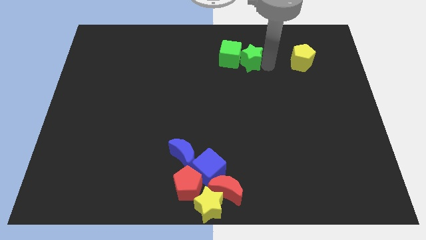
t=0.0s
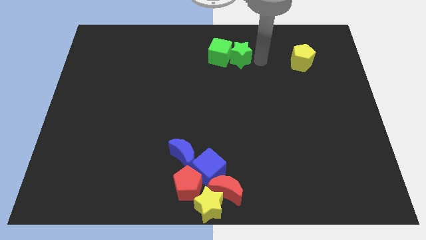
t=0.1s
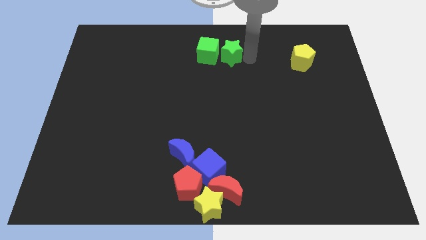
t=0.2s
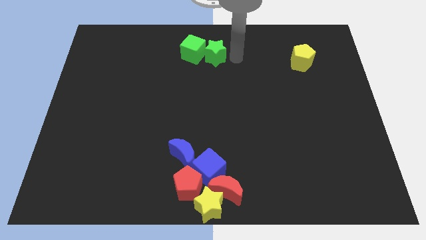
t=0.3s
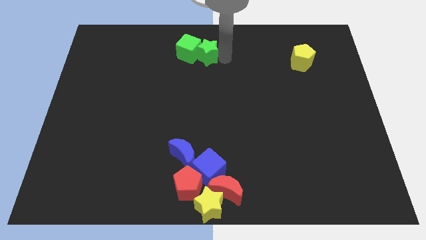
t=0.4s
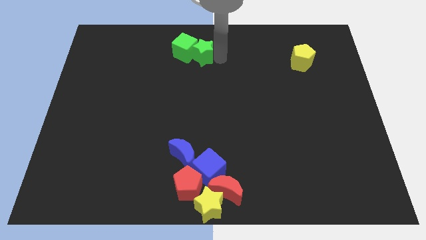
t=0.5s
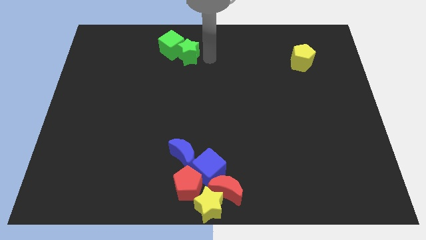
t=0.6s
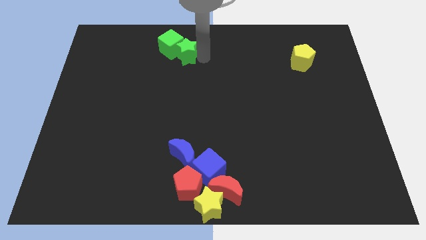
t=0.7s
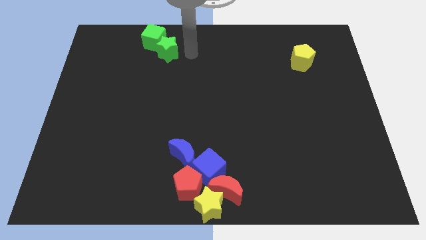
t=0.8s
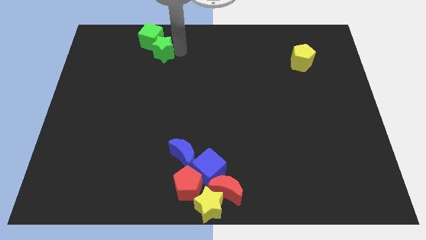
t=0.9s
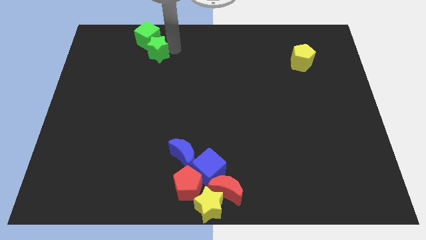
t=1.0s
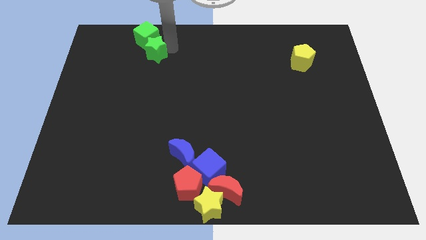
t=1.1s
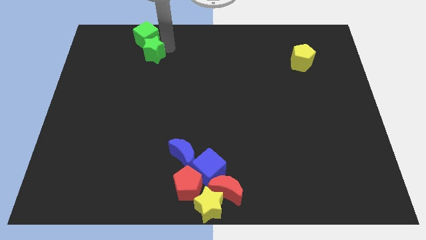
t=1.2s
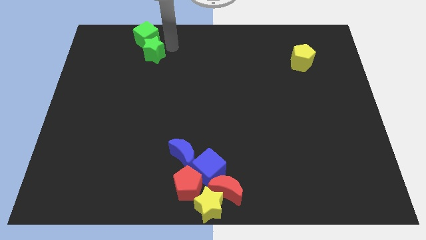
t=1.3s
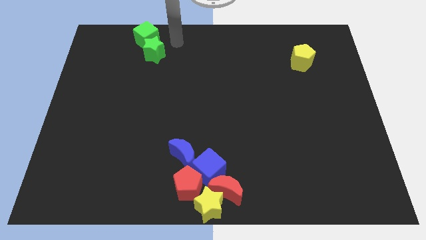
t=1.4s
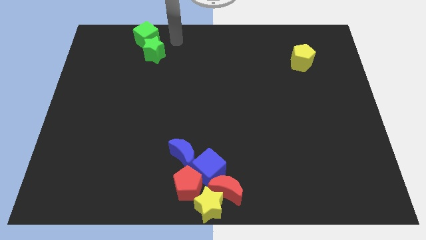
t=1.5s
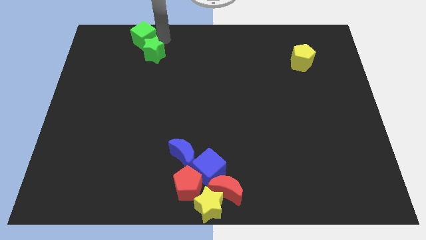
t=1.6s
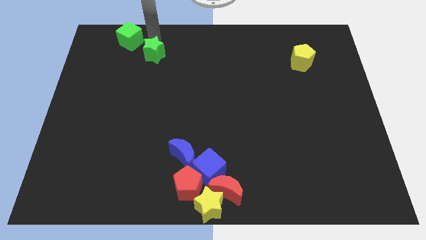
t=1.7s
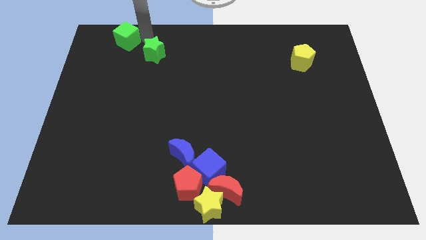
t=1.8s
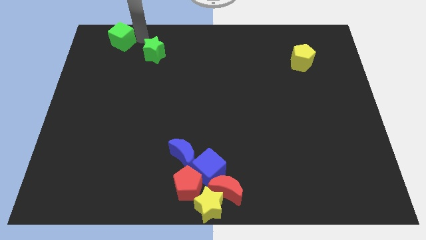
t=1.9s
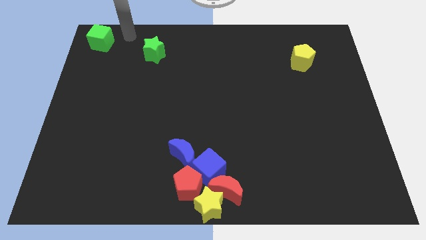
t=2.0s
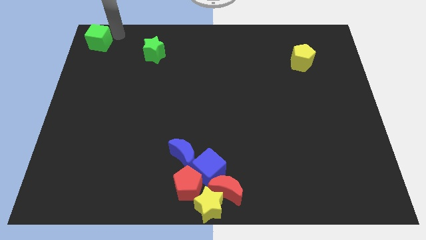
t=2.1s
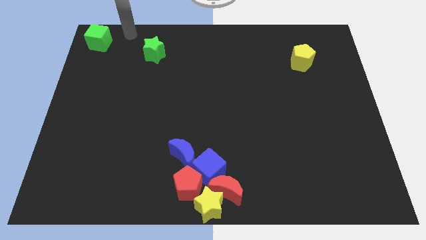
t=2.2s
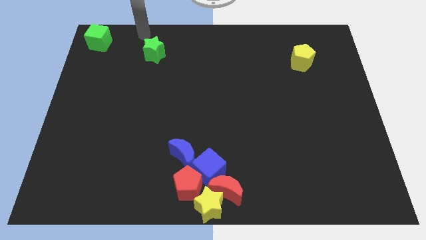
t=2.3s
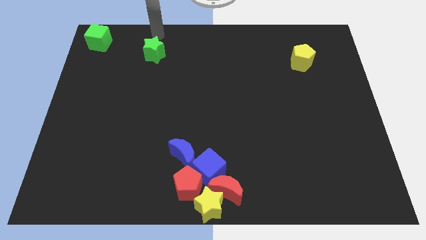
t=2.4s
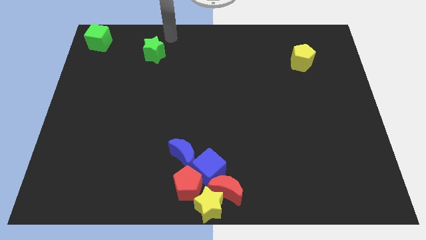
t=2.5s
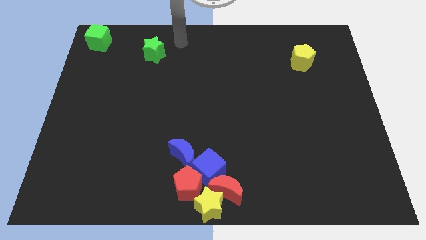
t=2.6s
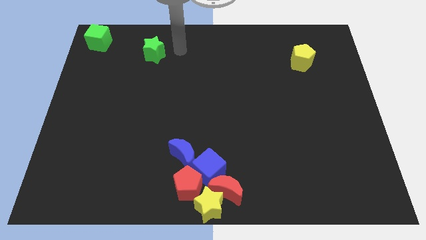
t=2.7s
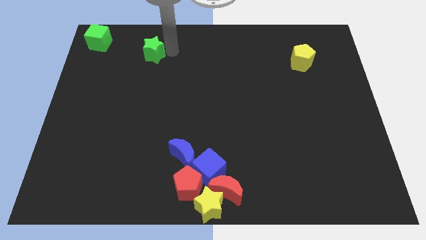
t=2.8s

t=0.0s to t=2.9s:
move the green cube to the top left of the board

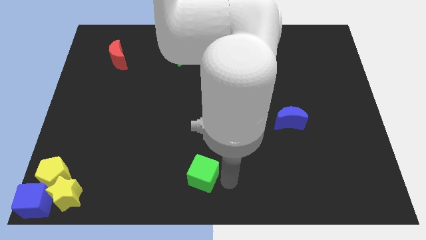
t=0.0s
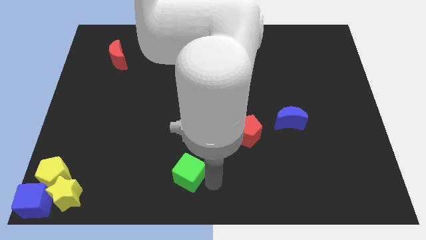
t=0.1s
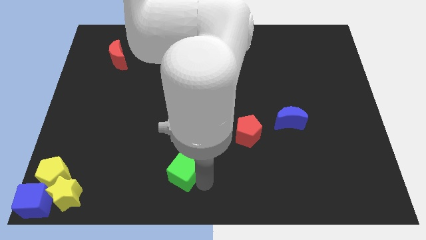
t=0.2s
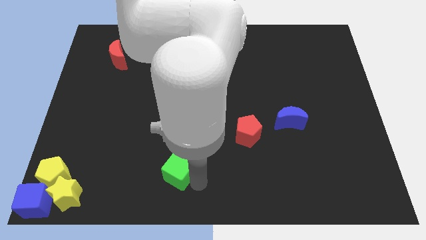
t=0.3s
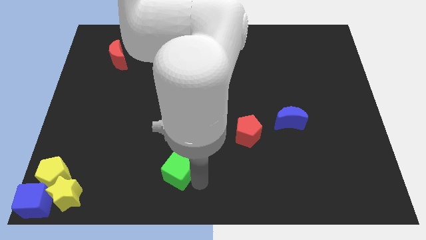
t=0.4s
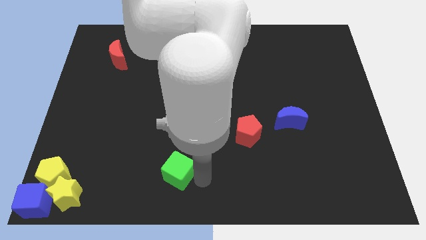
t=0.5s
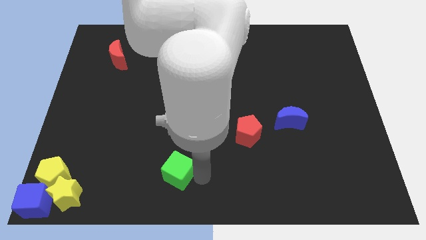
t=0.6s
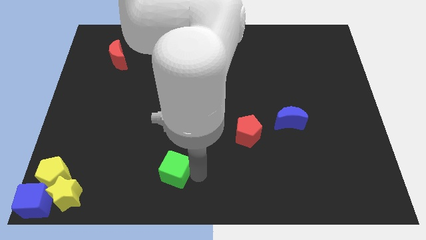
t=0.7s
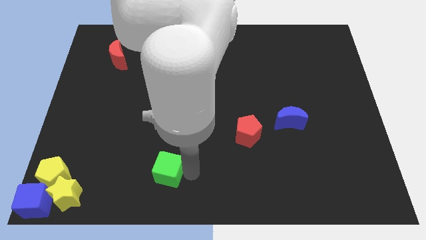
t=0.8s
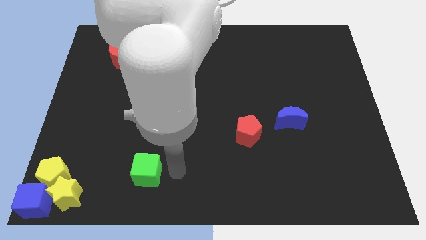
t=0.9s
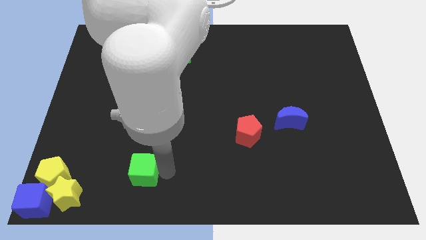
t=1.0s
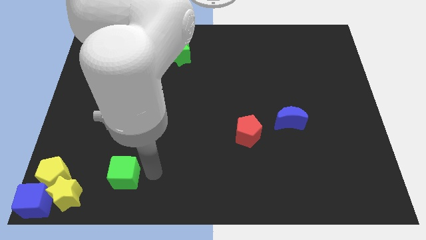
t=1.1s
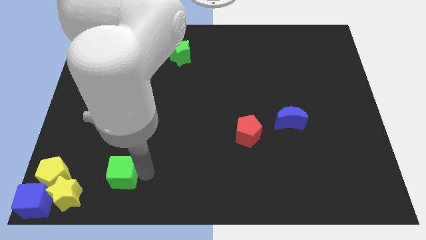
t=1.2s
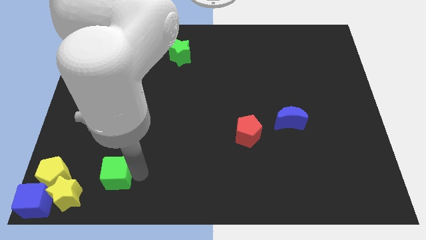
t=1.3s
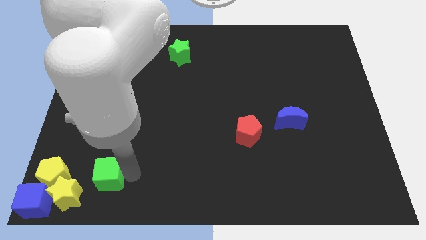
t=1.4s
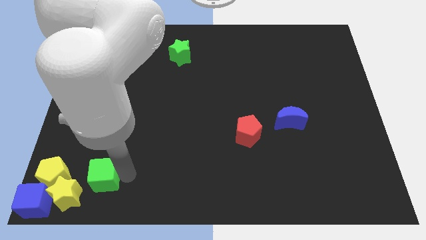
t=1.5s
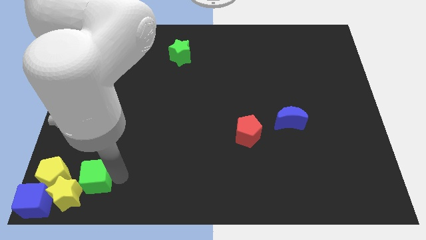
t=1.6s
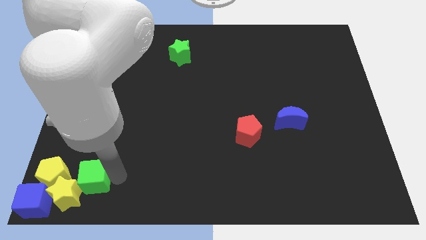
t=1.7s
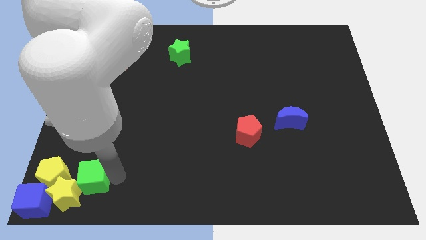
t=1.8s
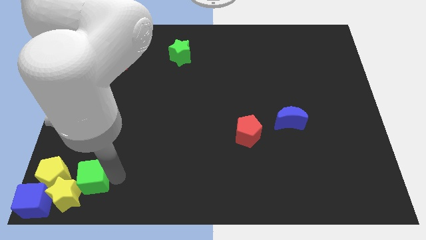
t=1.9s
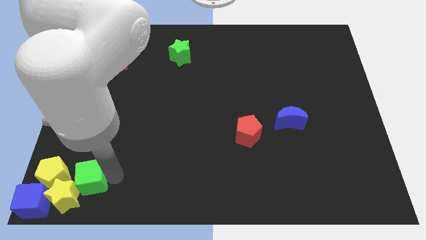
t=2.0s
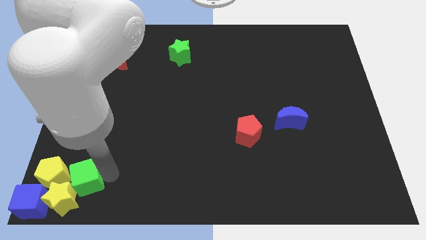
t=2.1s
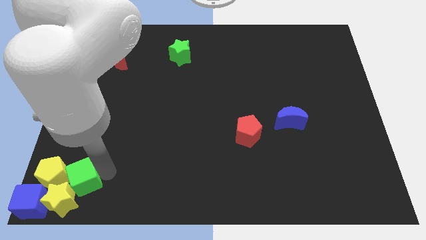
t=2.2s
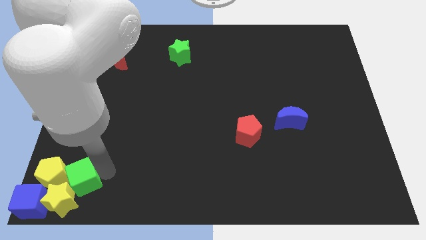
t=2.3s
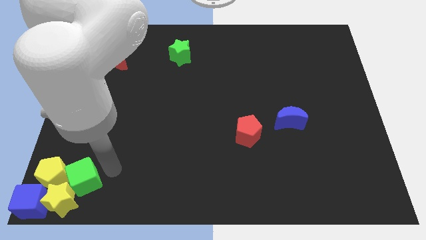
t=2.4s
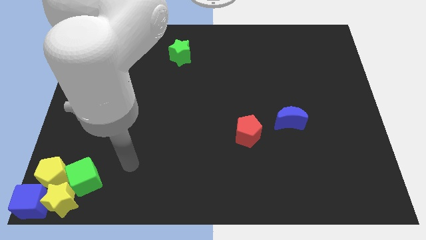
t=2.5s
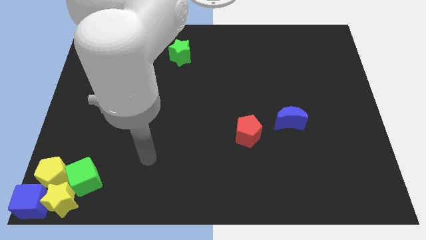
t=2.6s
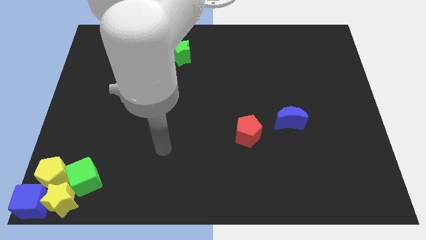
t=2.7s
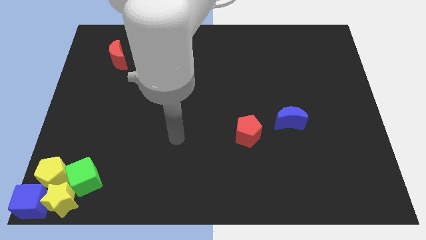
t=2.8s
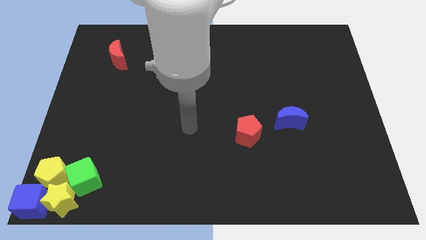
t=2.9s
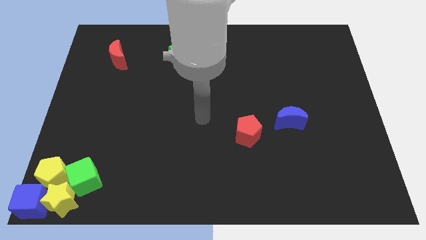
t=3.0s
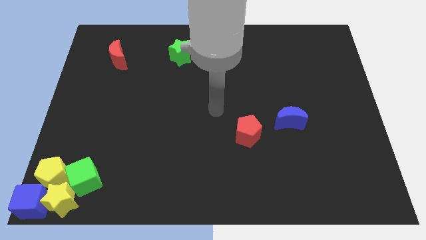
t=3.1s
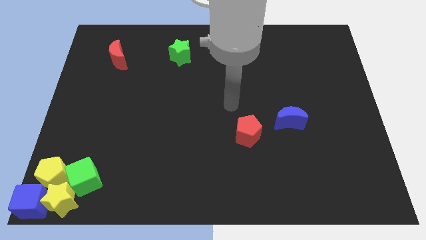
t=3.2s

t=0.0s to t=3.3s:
add the green cube to the group of blocks at the left corner of the board

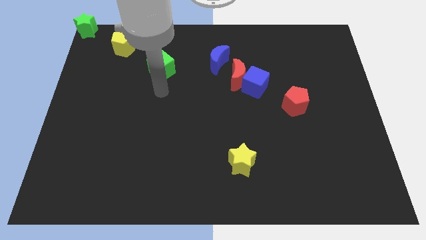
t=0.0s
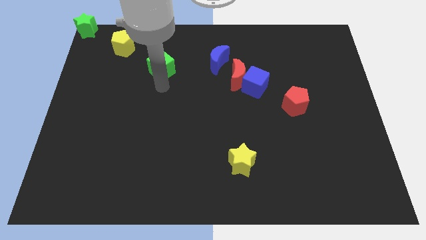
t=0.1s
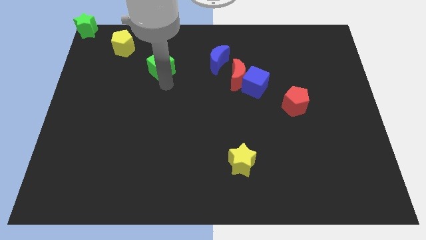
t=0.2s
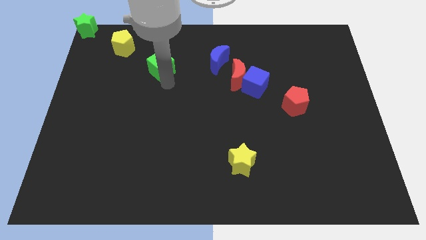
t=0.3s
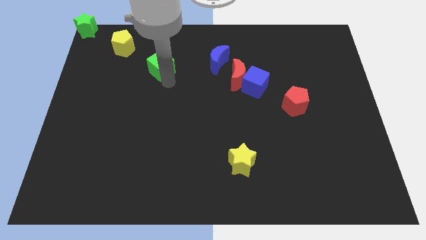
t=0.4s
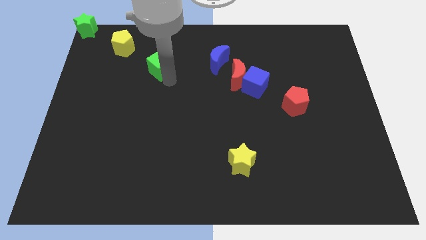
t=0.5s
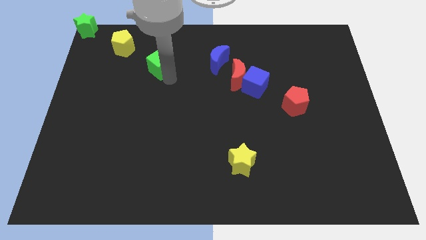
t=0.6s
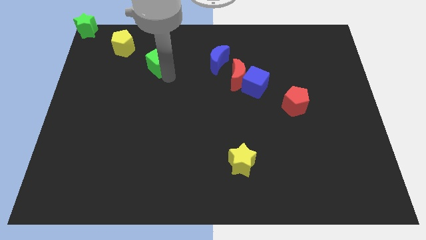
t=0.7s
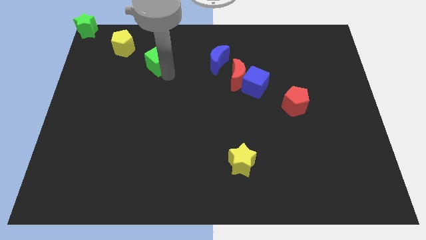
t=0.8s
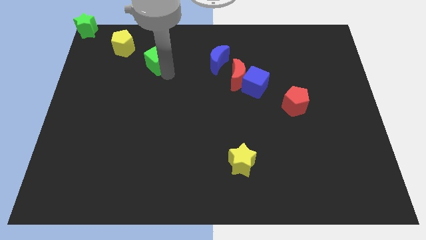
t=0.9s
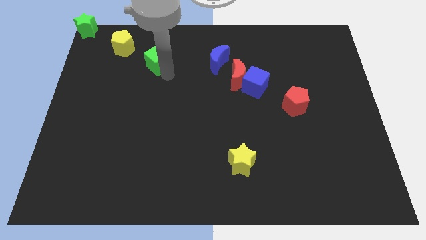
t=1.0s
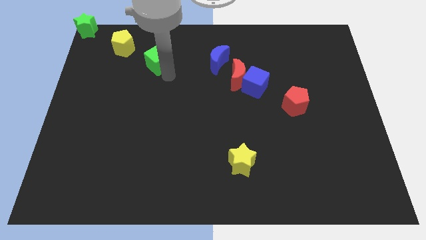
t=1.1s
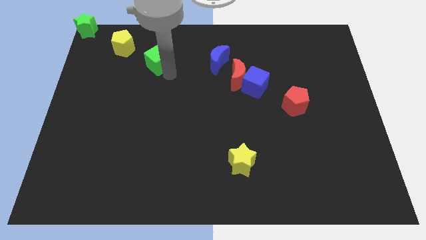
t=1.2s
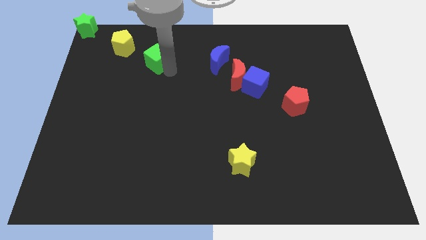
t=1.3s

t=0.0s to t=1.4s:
move the green cube slightly to the bottom right side of the yellow pentagon

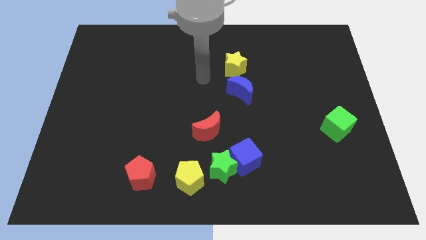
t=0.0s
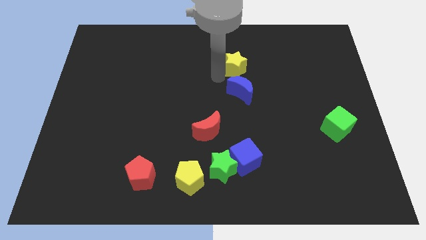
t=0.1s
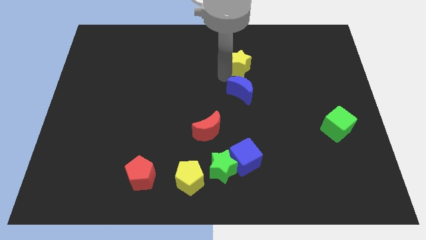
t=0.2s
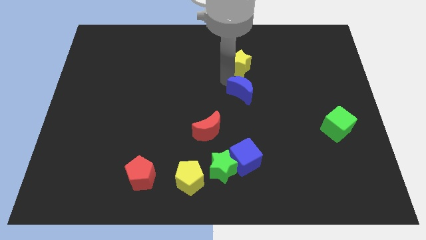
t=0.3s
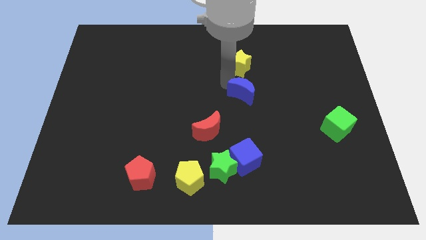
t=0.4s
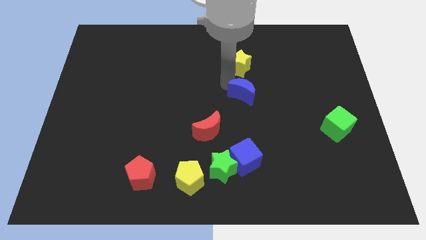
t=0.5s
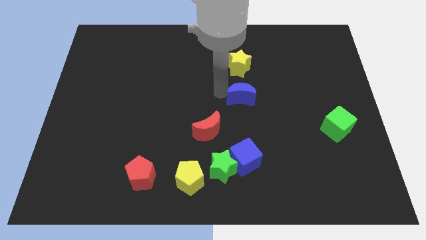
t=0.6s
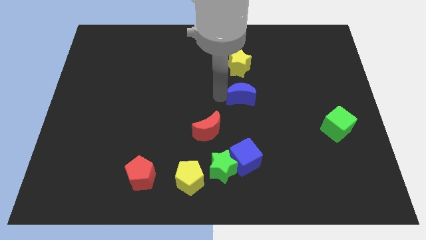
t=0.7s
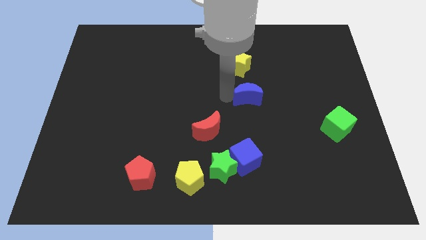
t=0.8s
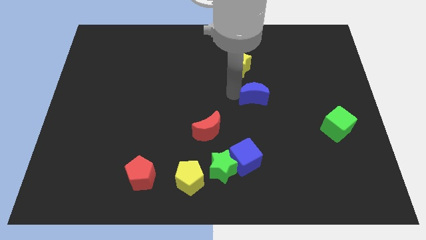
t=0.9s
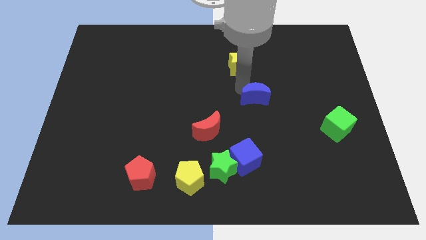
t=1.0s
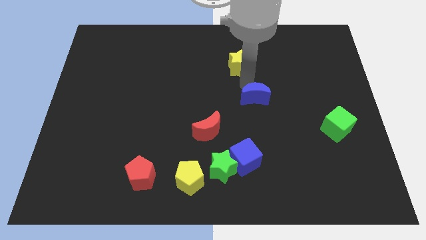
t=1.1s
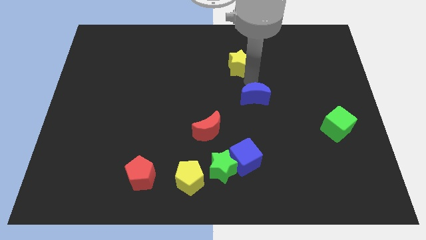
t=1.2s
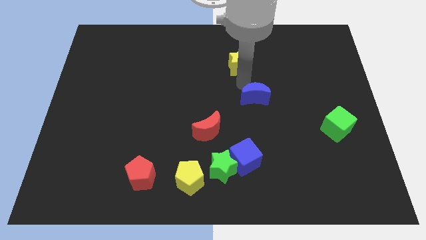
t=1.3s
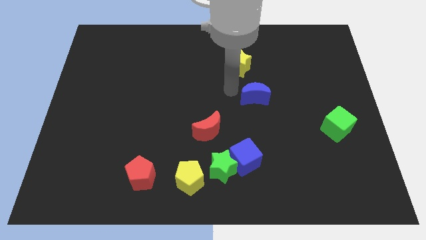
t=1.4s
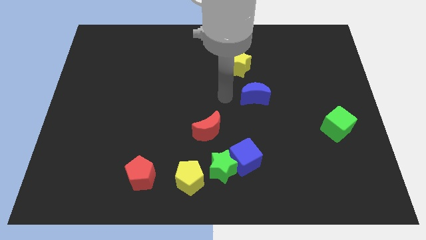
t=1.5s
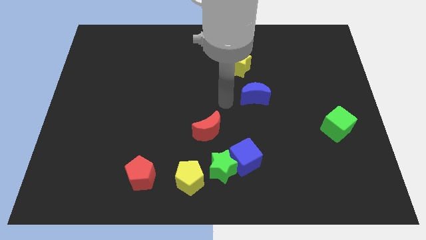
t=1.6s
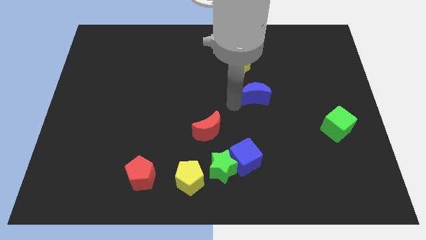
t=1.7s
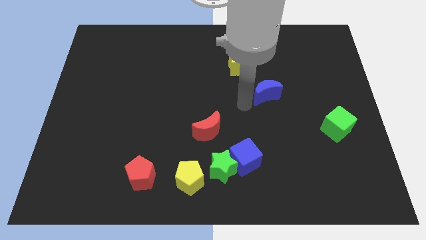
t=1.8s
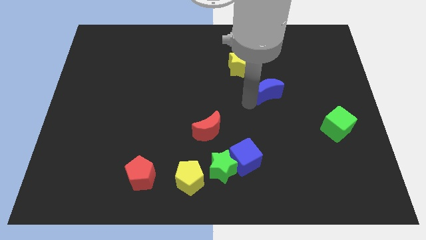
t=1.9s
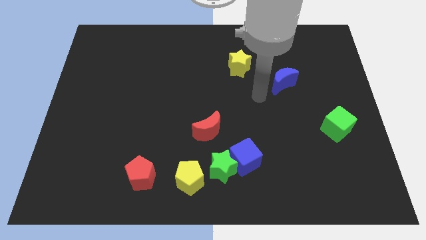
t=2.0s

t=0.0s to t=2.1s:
move the blue crescent away from the yellow star
